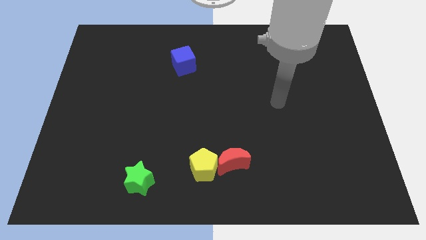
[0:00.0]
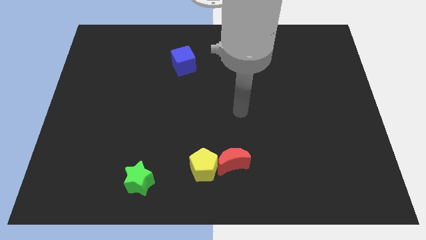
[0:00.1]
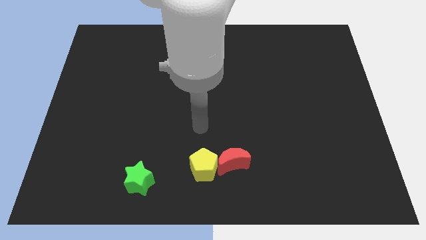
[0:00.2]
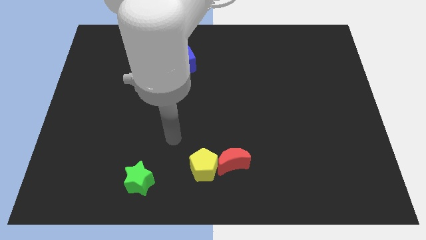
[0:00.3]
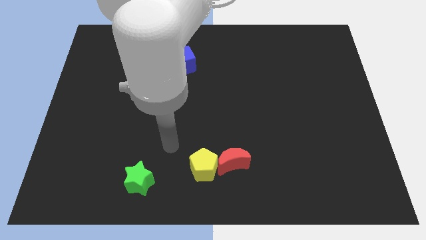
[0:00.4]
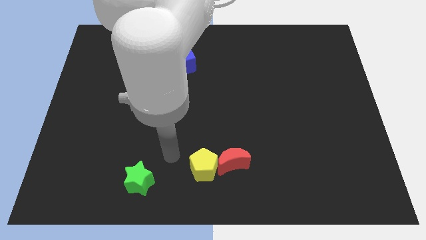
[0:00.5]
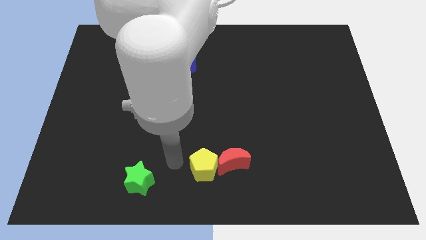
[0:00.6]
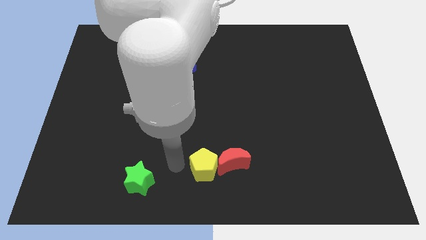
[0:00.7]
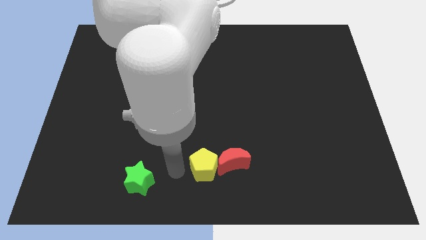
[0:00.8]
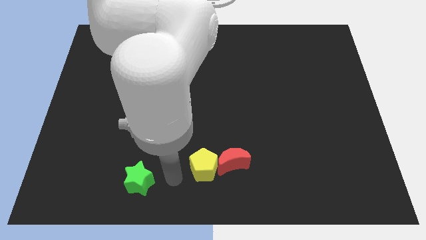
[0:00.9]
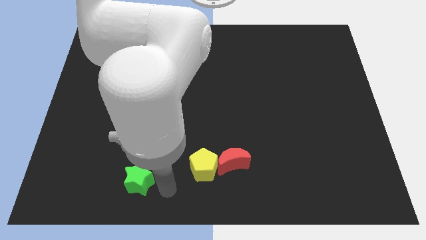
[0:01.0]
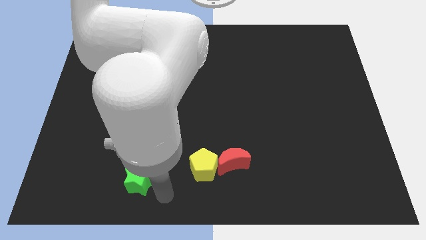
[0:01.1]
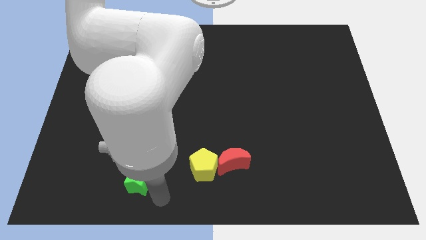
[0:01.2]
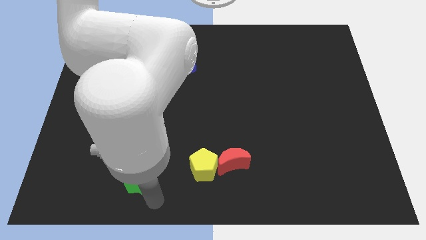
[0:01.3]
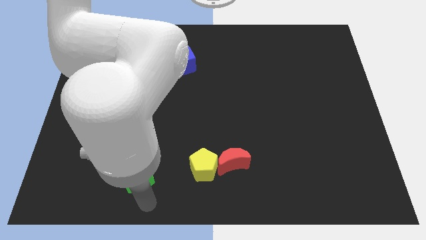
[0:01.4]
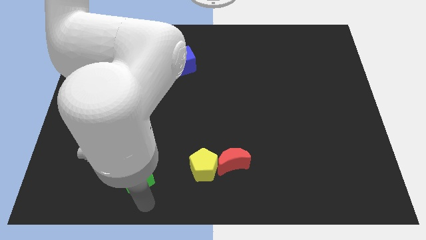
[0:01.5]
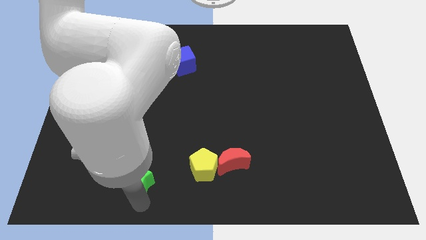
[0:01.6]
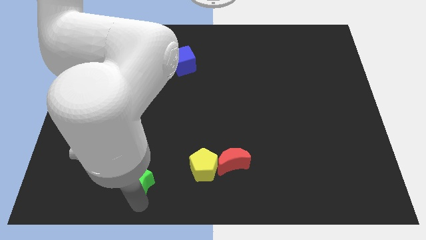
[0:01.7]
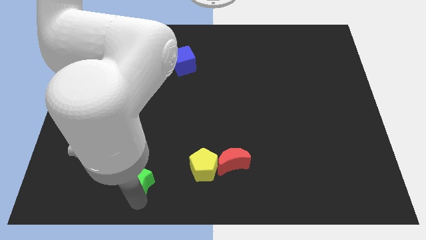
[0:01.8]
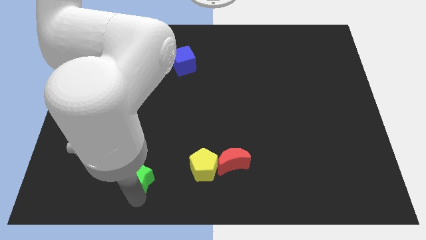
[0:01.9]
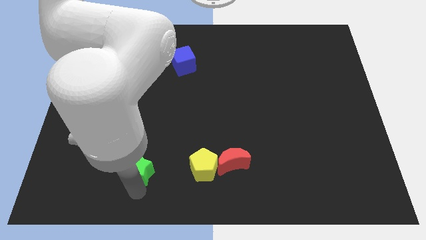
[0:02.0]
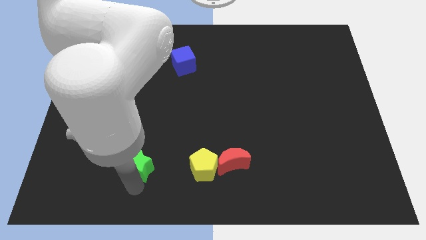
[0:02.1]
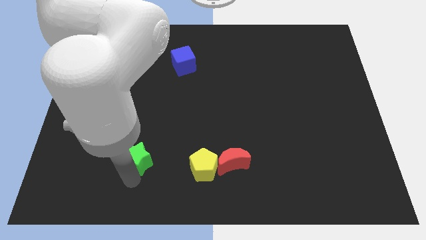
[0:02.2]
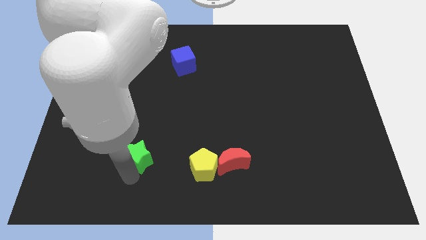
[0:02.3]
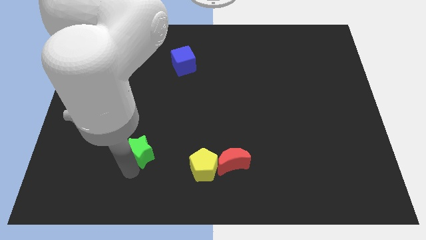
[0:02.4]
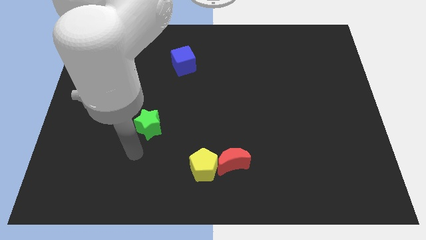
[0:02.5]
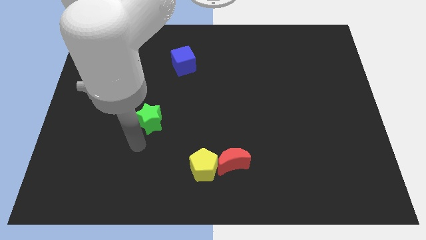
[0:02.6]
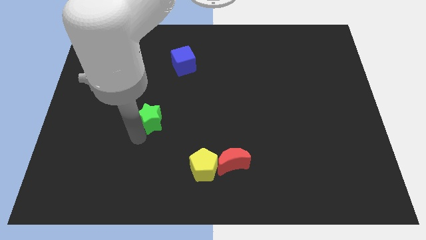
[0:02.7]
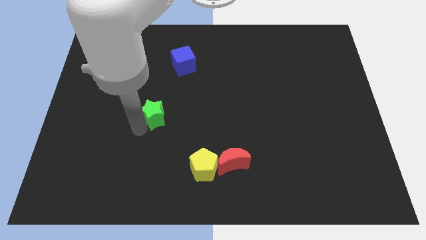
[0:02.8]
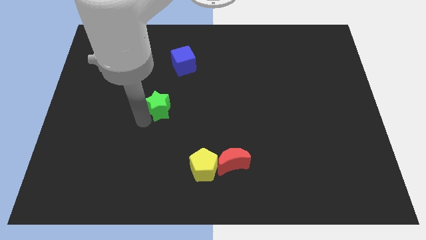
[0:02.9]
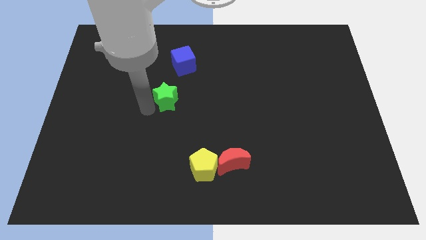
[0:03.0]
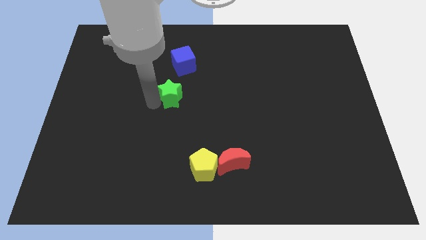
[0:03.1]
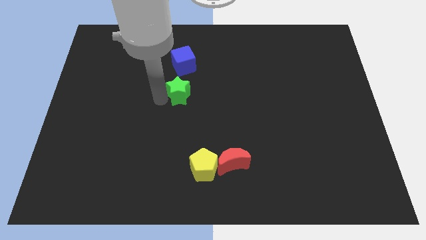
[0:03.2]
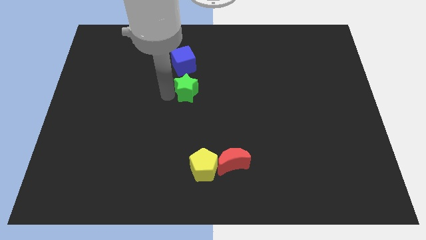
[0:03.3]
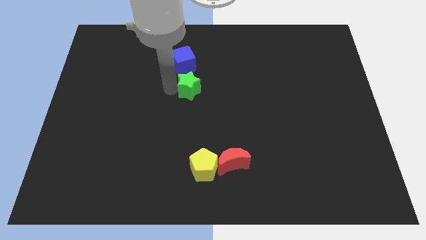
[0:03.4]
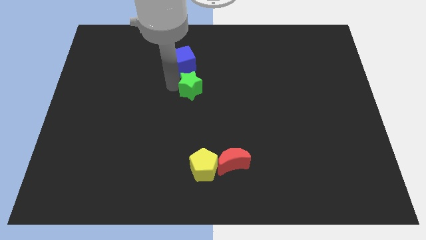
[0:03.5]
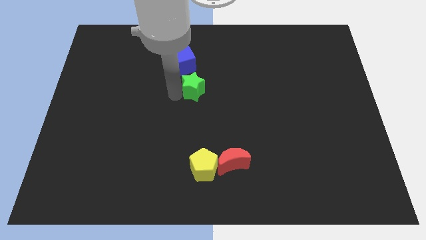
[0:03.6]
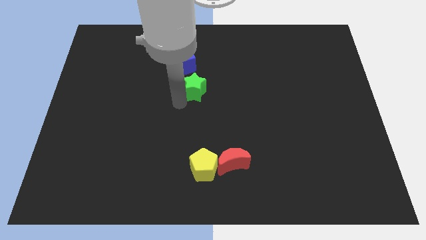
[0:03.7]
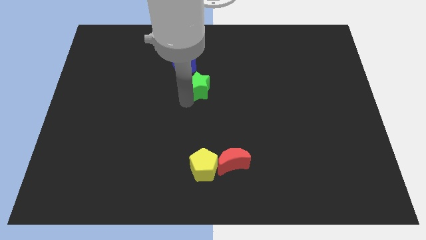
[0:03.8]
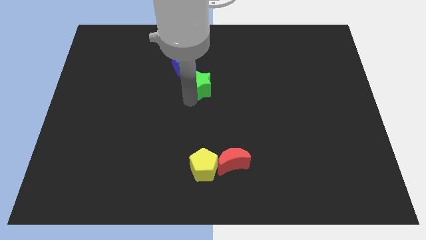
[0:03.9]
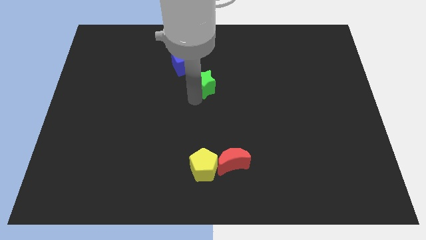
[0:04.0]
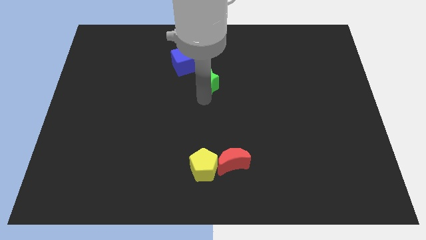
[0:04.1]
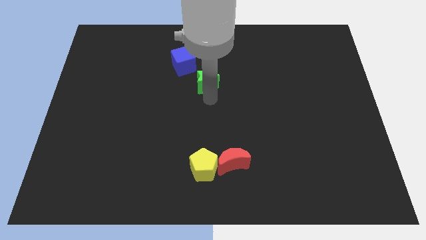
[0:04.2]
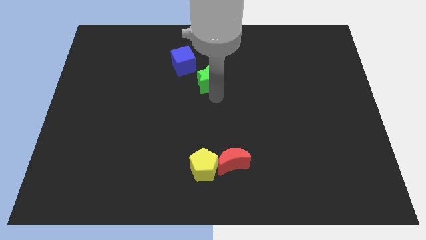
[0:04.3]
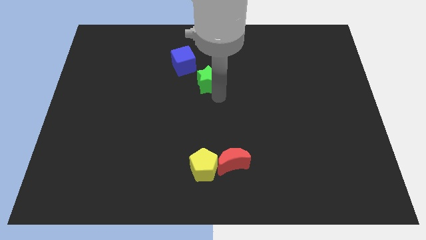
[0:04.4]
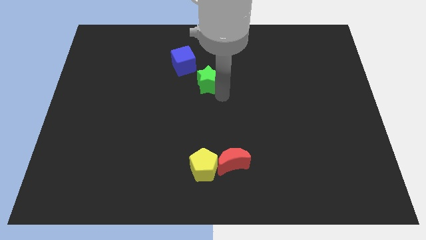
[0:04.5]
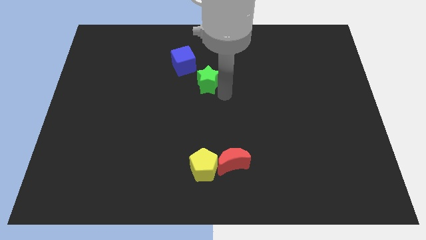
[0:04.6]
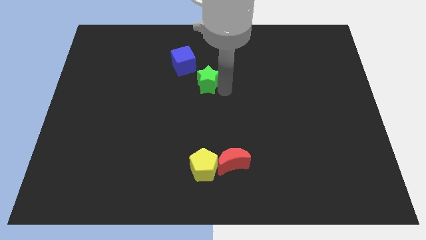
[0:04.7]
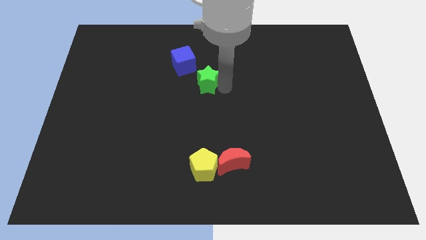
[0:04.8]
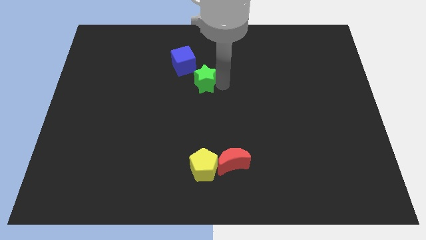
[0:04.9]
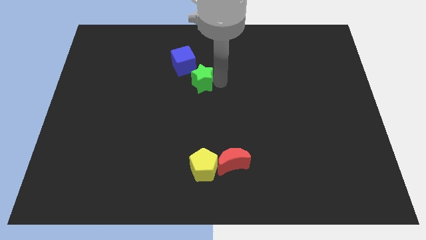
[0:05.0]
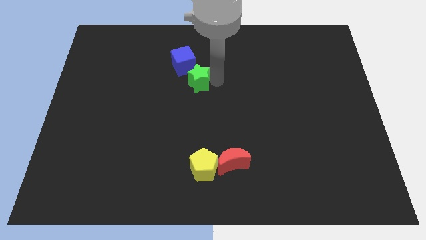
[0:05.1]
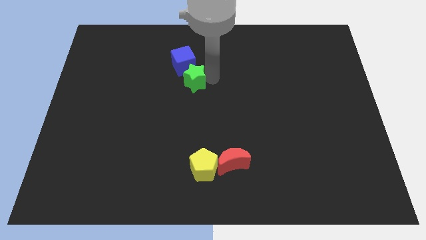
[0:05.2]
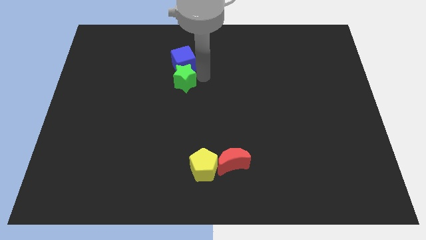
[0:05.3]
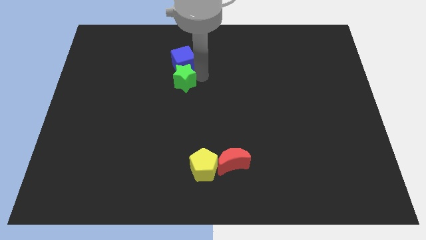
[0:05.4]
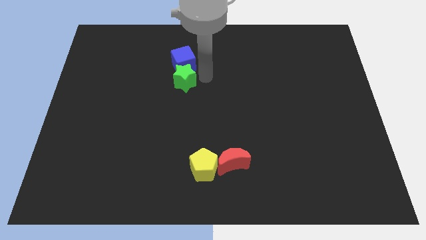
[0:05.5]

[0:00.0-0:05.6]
put the green block towards the cube

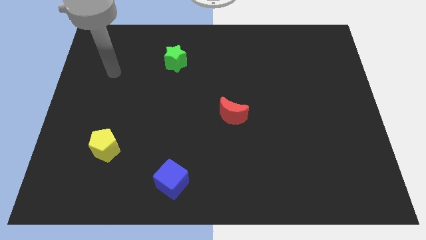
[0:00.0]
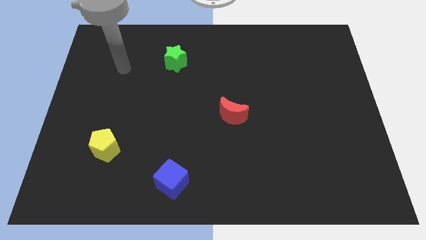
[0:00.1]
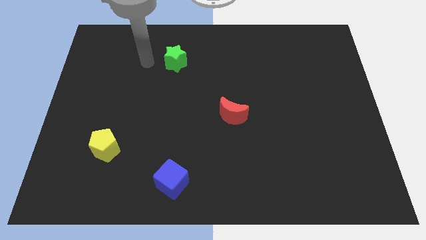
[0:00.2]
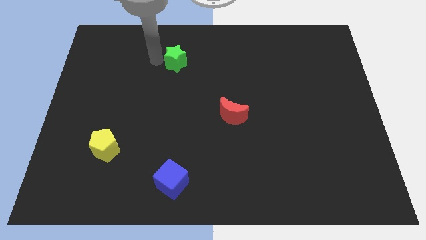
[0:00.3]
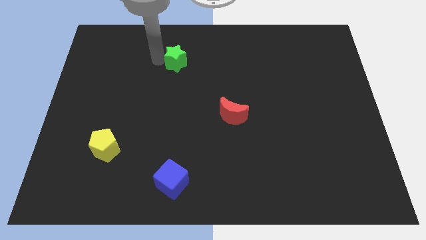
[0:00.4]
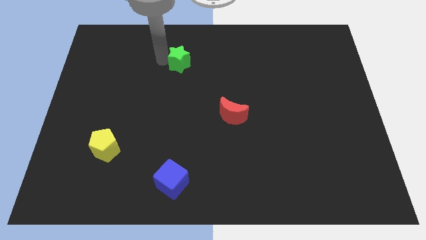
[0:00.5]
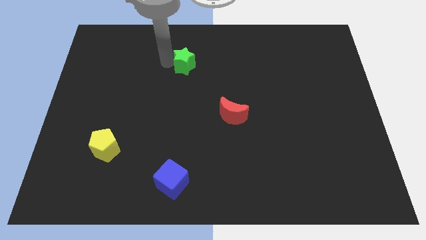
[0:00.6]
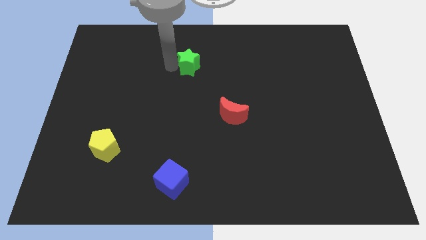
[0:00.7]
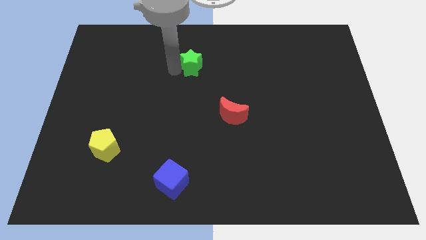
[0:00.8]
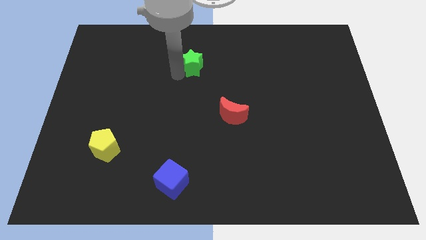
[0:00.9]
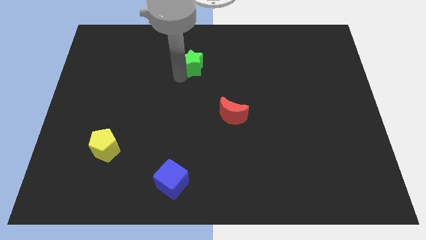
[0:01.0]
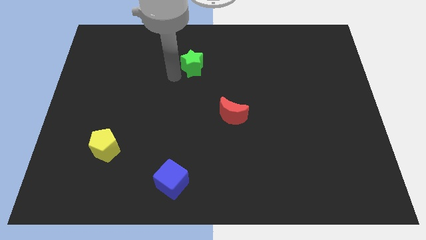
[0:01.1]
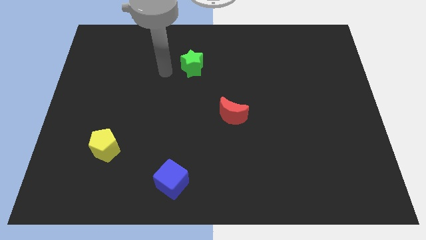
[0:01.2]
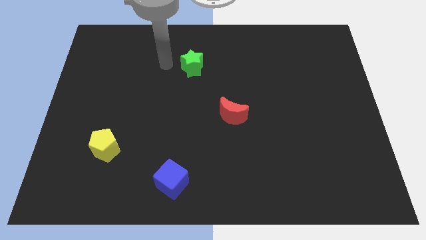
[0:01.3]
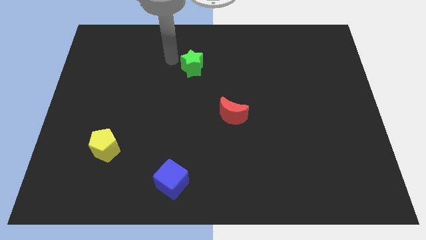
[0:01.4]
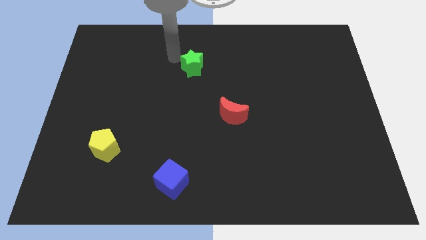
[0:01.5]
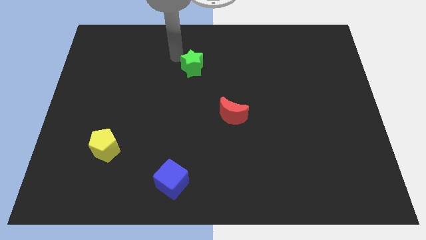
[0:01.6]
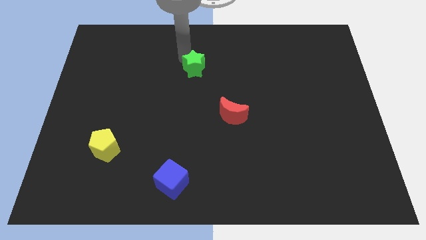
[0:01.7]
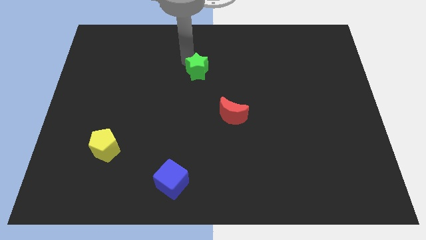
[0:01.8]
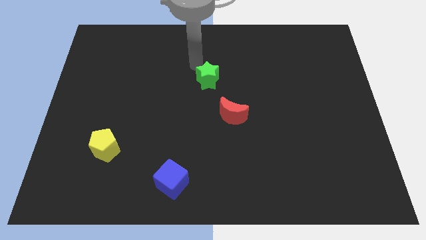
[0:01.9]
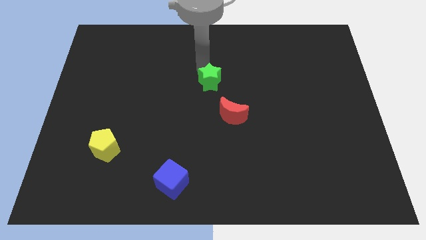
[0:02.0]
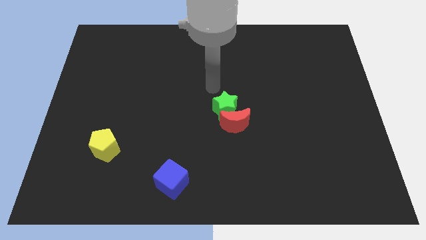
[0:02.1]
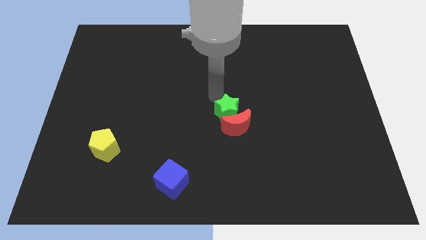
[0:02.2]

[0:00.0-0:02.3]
slide the star next to the moon

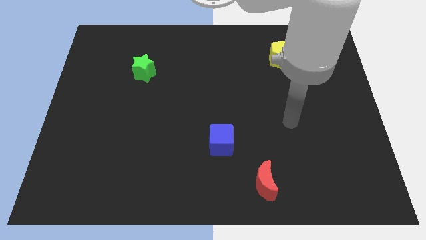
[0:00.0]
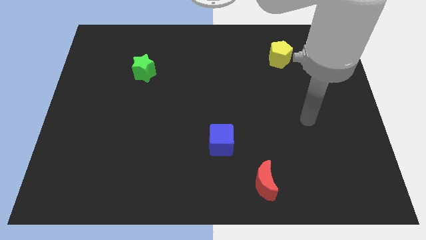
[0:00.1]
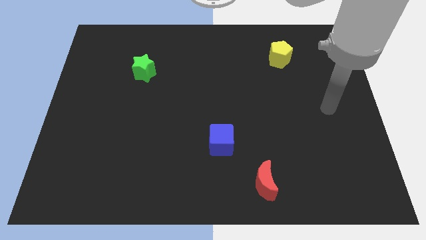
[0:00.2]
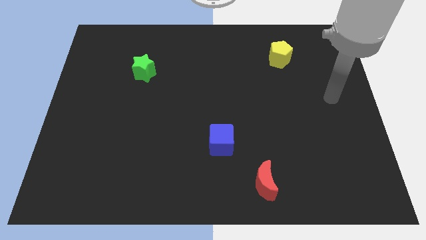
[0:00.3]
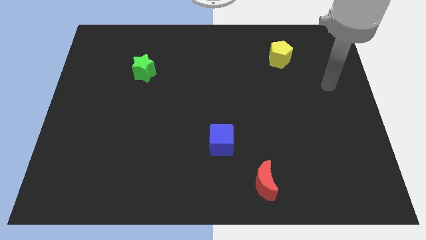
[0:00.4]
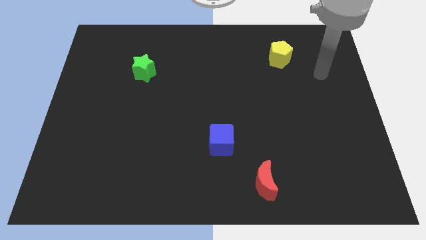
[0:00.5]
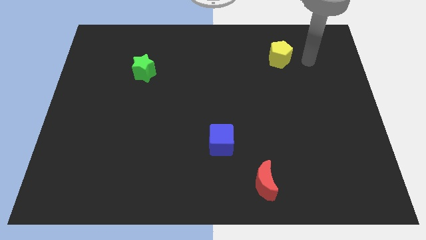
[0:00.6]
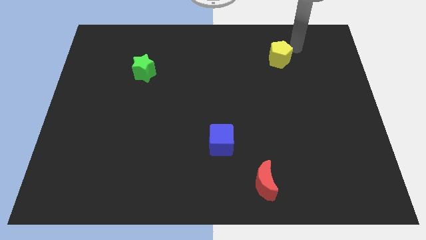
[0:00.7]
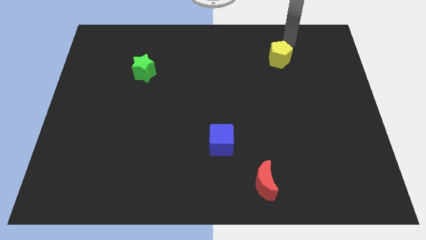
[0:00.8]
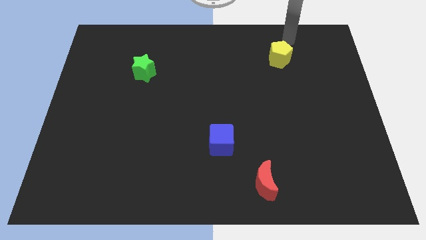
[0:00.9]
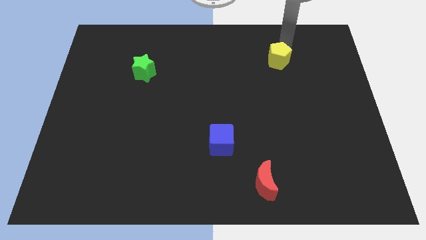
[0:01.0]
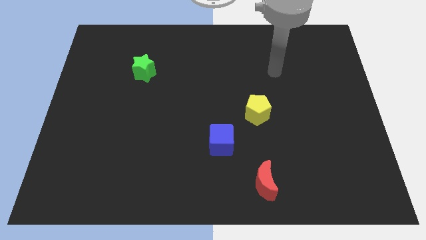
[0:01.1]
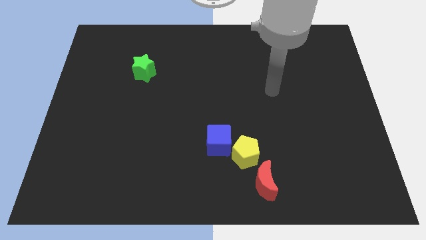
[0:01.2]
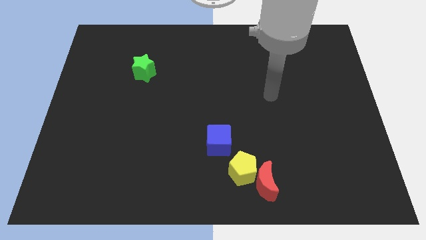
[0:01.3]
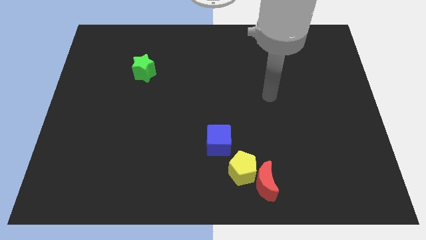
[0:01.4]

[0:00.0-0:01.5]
move the yellow pentagon to the red moon
